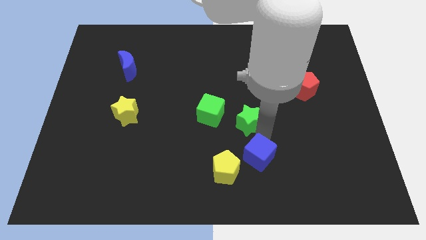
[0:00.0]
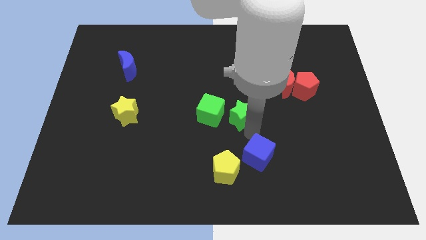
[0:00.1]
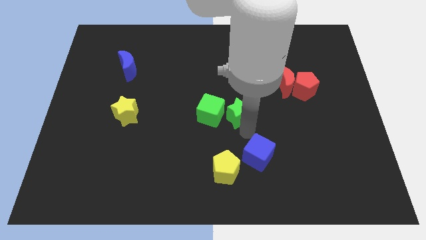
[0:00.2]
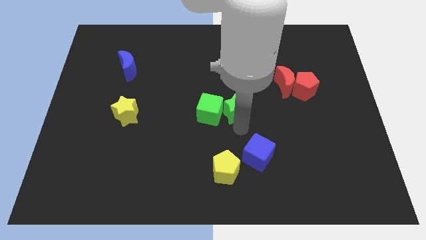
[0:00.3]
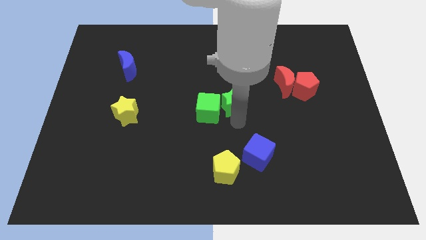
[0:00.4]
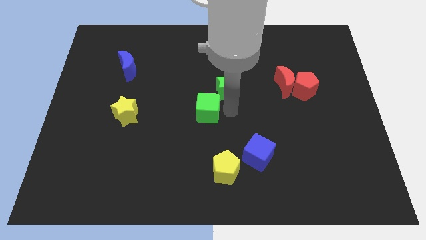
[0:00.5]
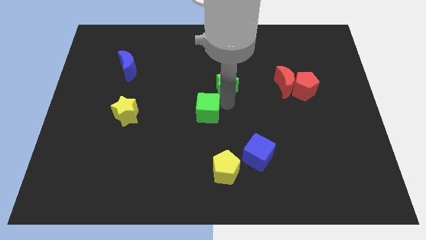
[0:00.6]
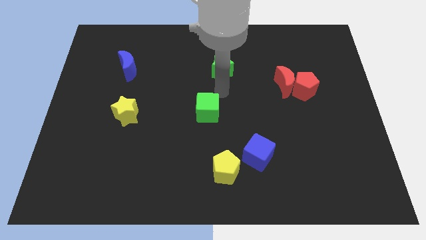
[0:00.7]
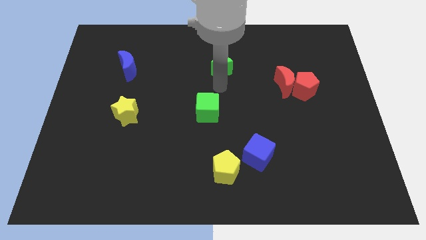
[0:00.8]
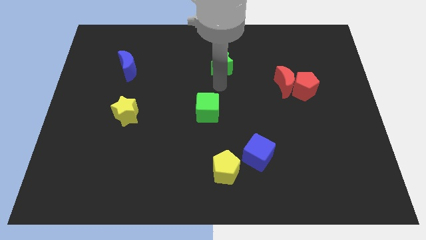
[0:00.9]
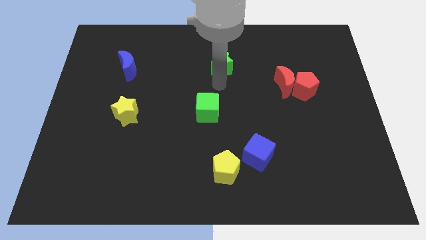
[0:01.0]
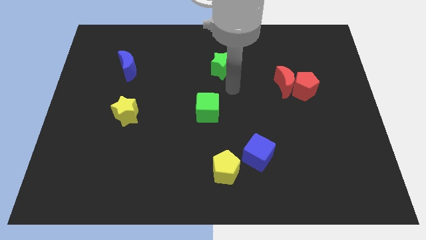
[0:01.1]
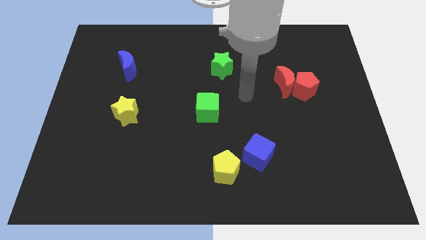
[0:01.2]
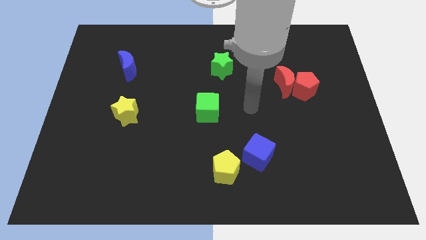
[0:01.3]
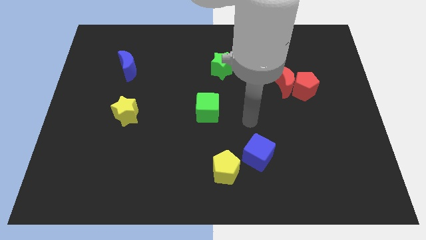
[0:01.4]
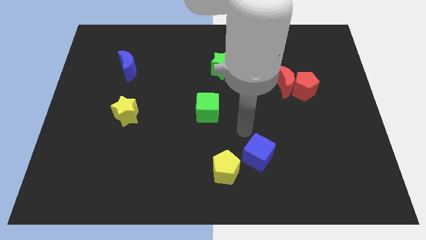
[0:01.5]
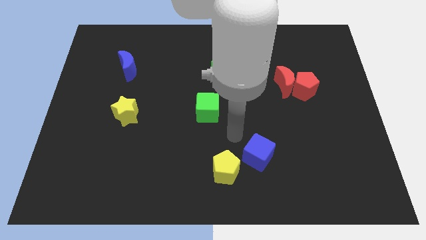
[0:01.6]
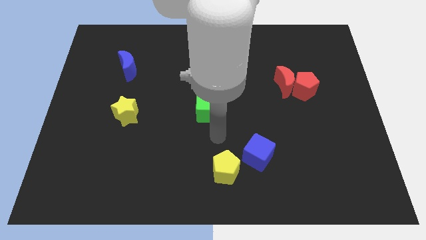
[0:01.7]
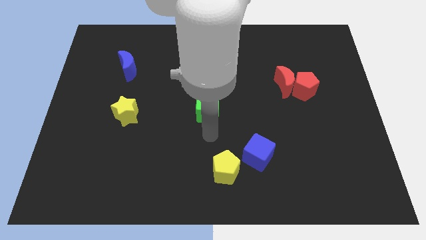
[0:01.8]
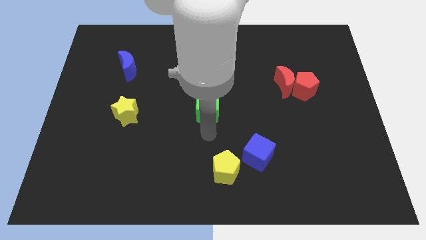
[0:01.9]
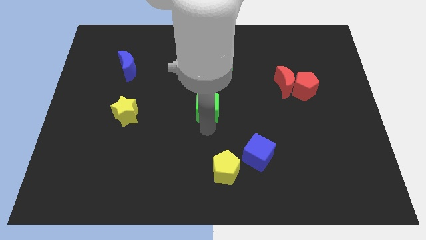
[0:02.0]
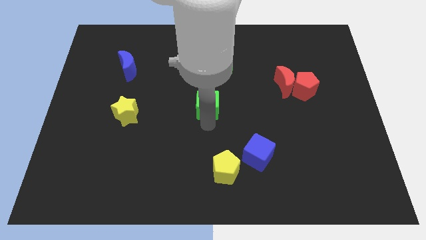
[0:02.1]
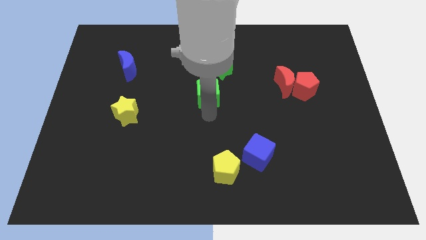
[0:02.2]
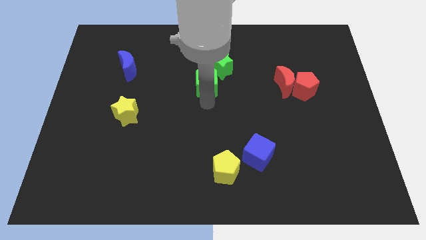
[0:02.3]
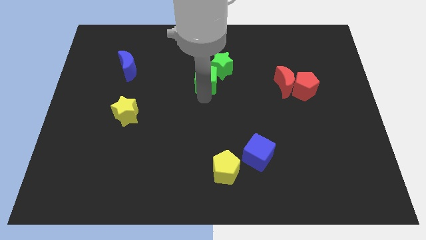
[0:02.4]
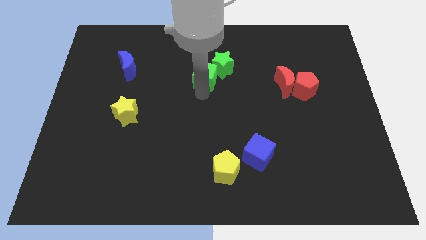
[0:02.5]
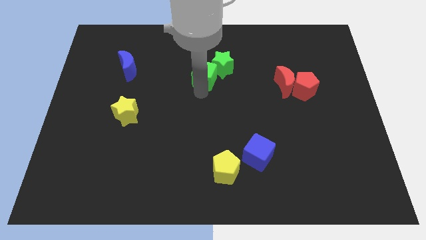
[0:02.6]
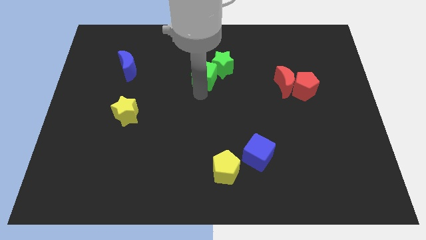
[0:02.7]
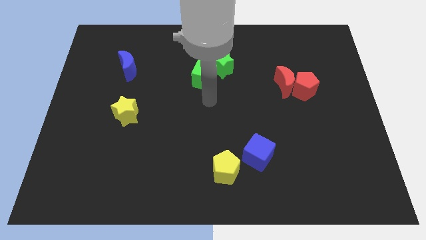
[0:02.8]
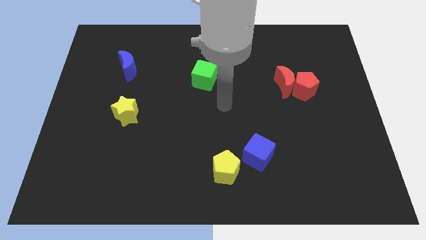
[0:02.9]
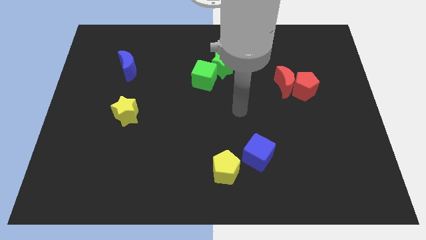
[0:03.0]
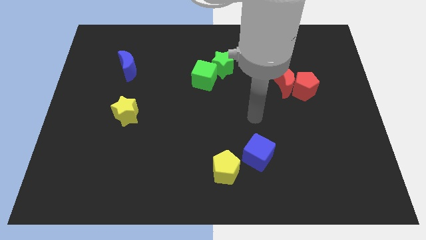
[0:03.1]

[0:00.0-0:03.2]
push the green blocks towards the top center

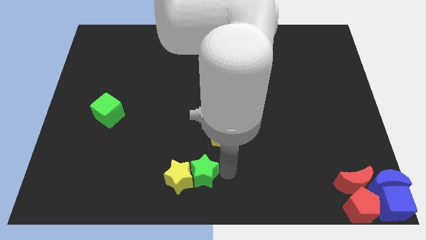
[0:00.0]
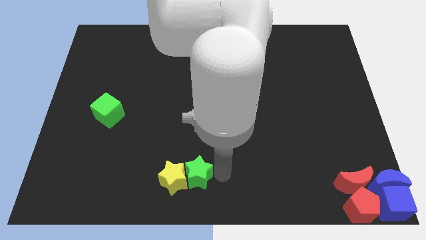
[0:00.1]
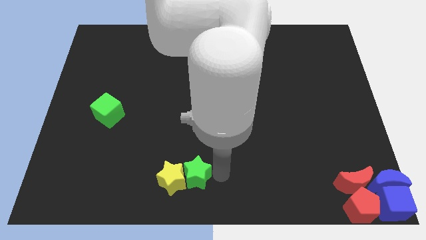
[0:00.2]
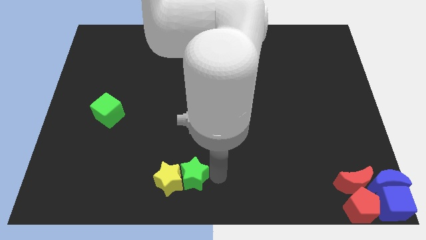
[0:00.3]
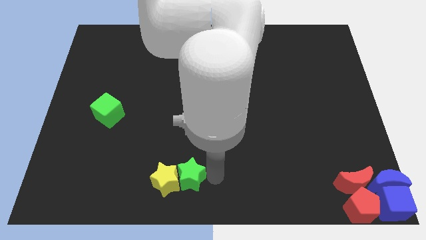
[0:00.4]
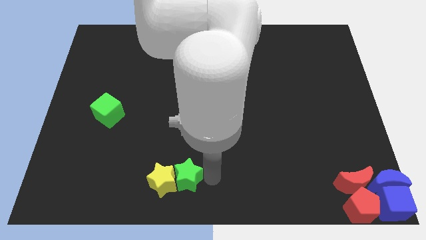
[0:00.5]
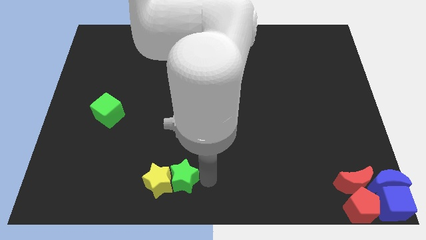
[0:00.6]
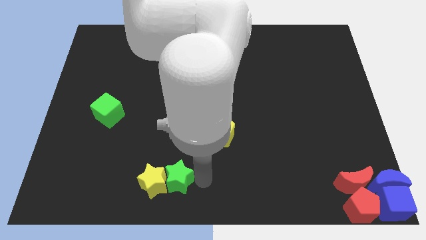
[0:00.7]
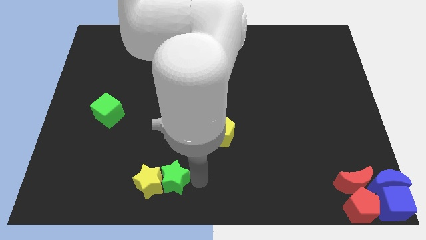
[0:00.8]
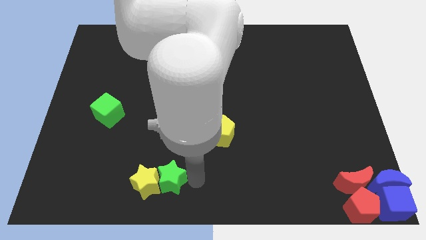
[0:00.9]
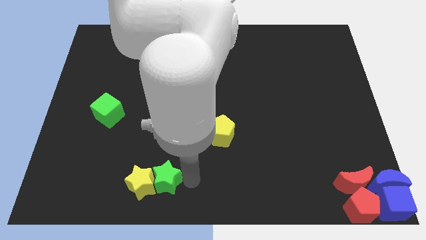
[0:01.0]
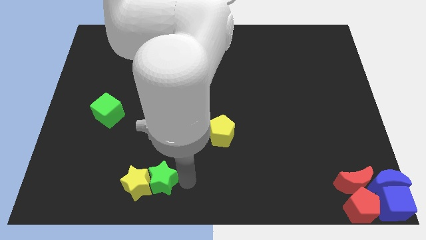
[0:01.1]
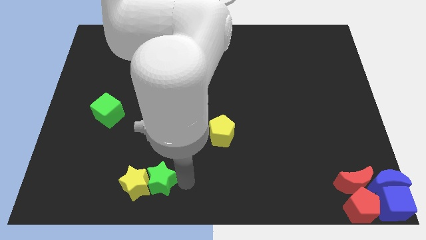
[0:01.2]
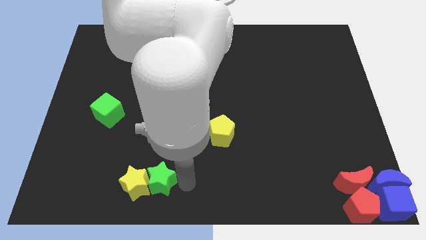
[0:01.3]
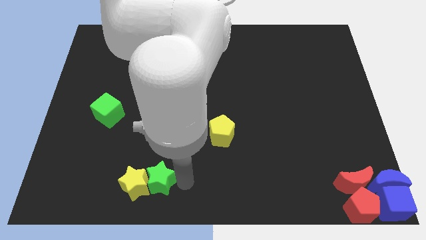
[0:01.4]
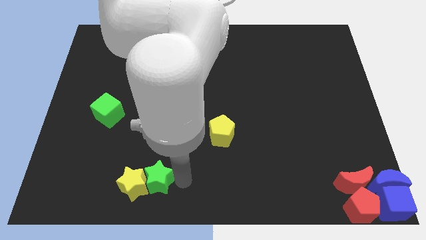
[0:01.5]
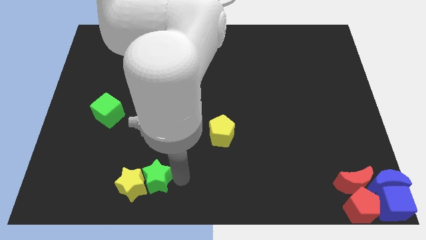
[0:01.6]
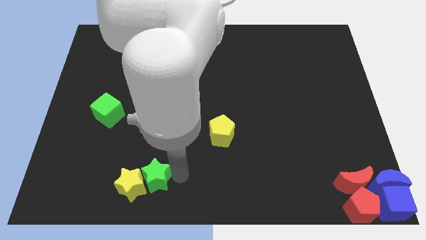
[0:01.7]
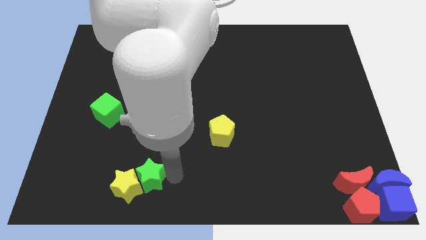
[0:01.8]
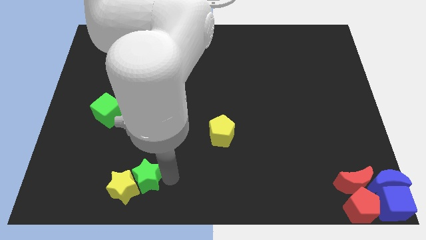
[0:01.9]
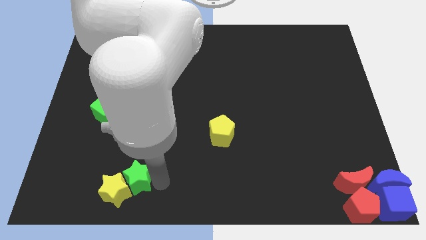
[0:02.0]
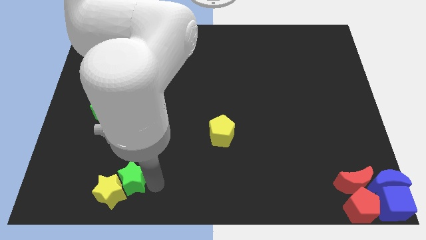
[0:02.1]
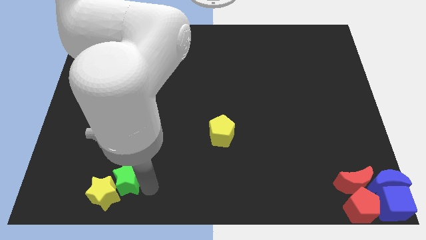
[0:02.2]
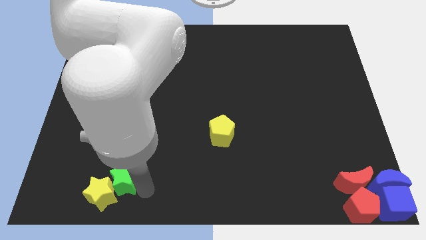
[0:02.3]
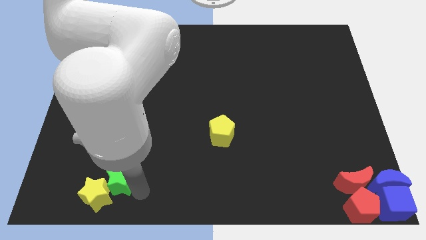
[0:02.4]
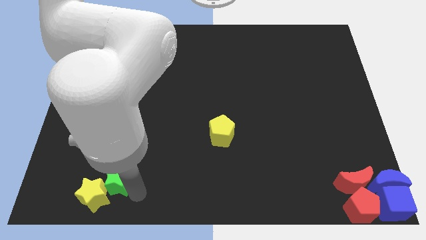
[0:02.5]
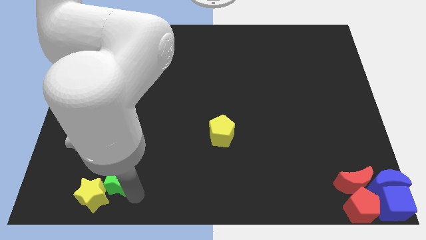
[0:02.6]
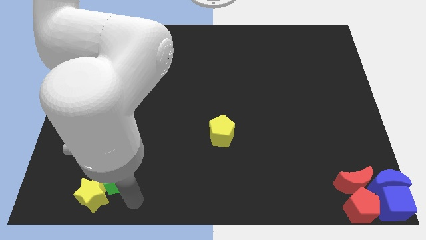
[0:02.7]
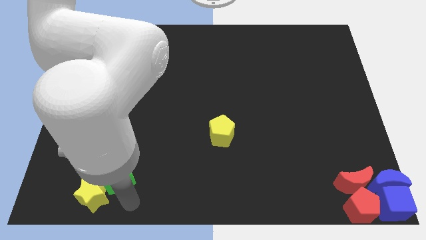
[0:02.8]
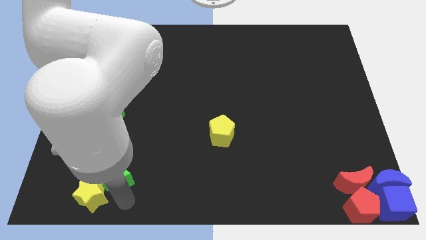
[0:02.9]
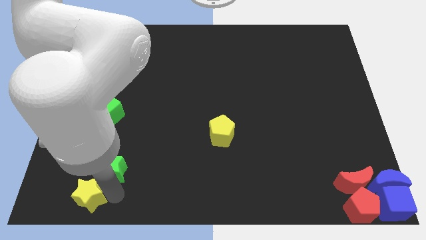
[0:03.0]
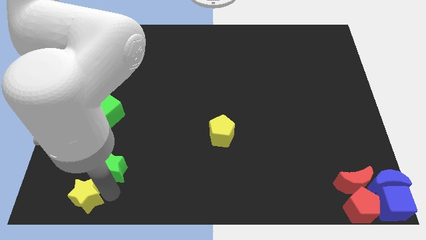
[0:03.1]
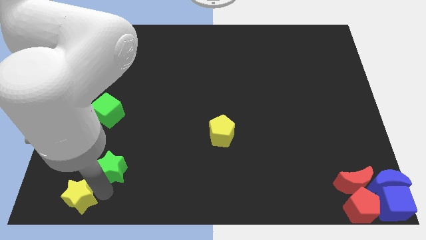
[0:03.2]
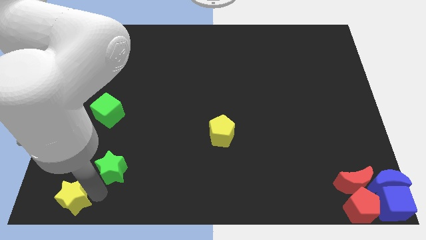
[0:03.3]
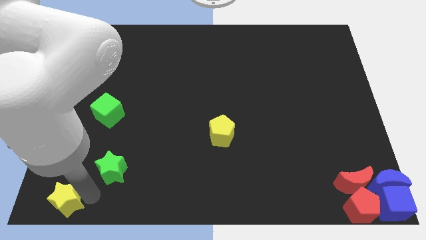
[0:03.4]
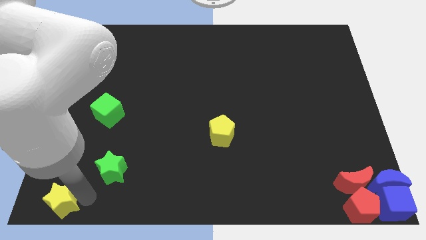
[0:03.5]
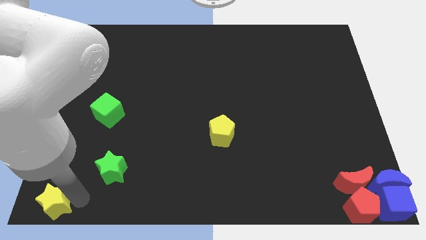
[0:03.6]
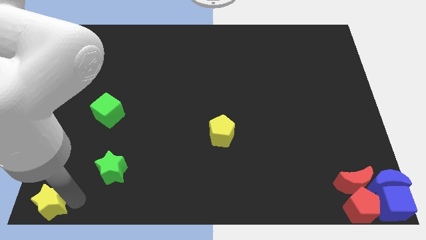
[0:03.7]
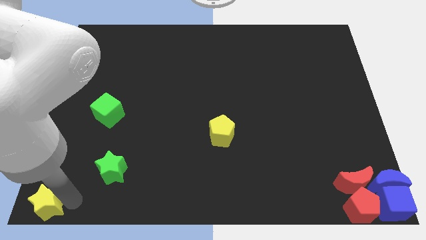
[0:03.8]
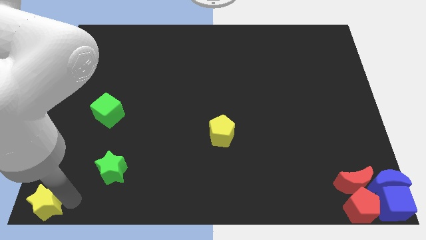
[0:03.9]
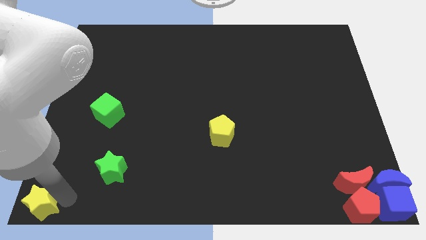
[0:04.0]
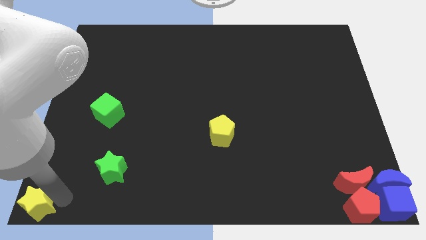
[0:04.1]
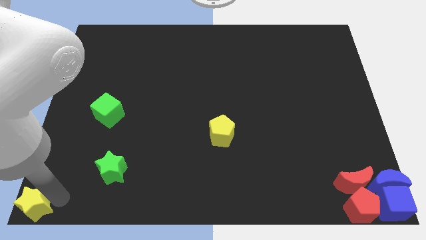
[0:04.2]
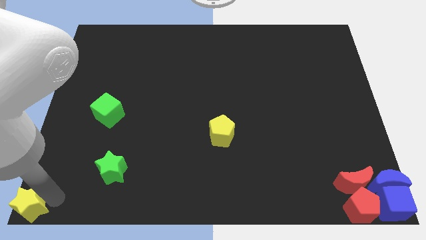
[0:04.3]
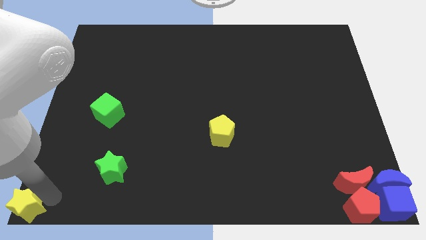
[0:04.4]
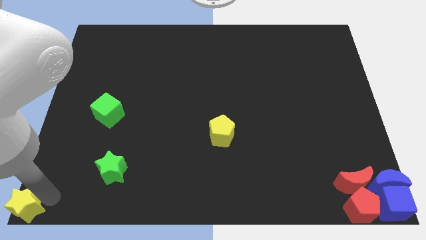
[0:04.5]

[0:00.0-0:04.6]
push yellow star to the left bottom of the board

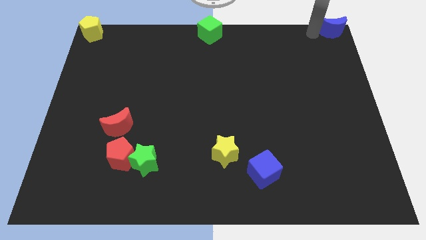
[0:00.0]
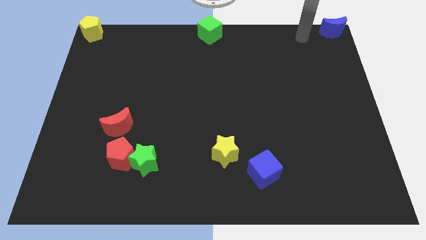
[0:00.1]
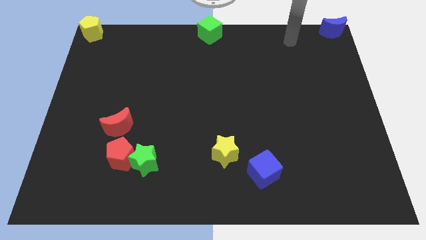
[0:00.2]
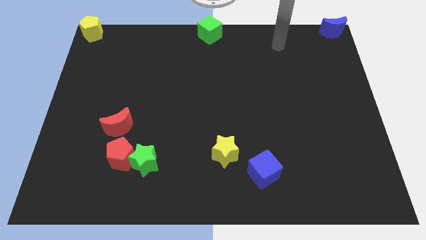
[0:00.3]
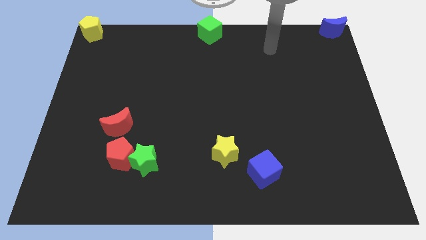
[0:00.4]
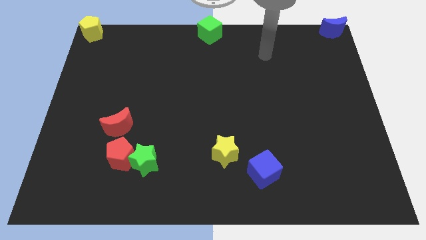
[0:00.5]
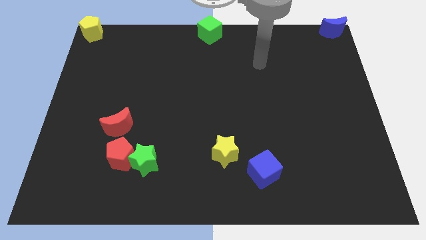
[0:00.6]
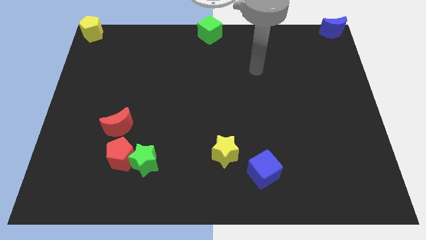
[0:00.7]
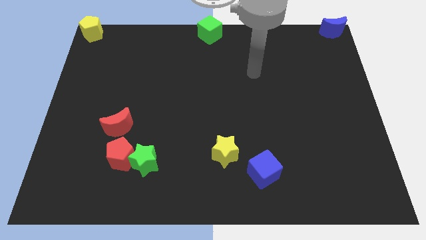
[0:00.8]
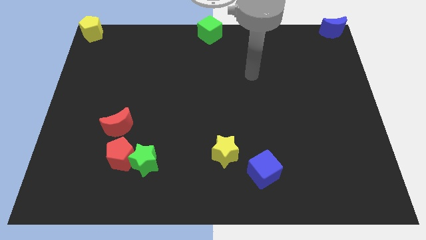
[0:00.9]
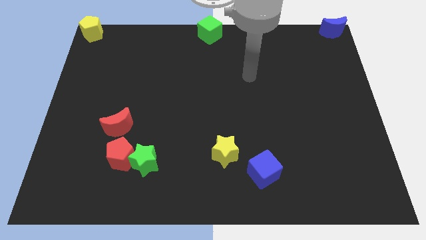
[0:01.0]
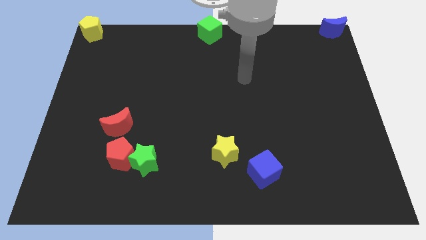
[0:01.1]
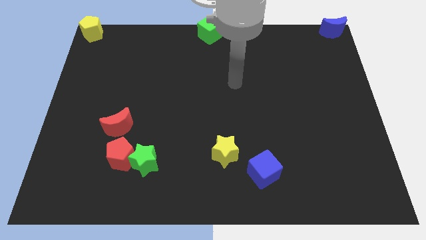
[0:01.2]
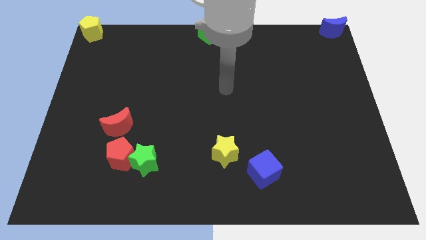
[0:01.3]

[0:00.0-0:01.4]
move the arm away from the blue moon
